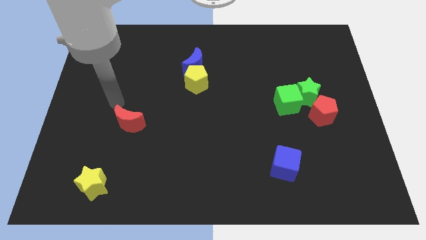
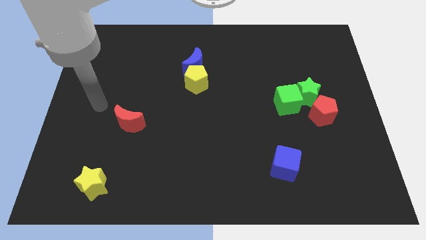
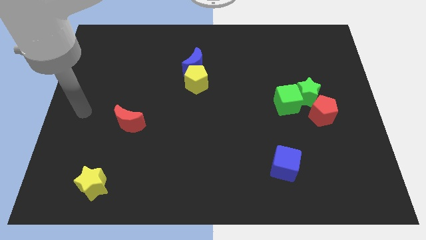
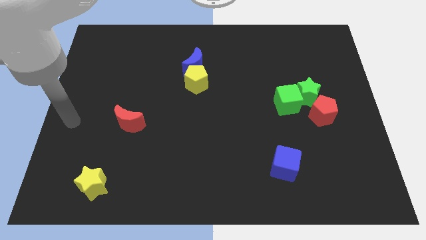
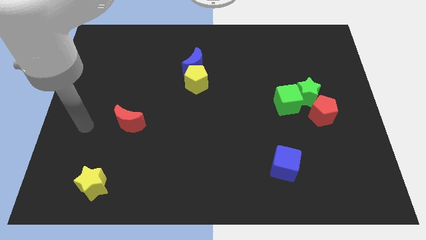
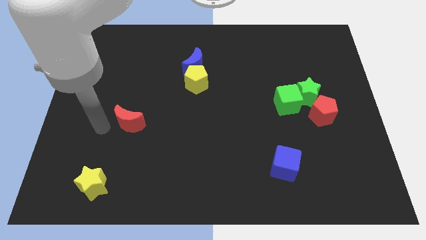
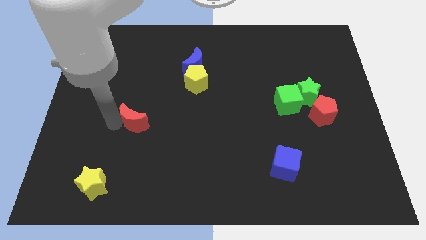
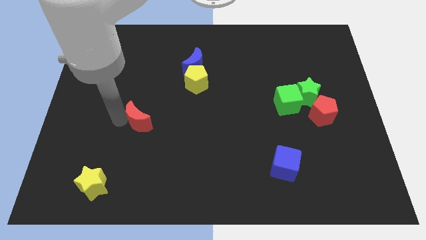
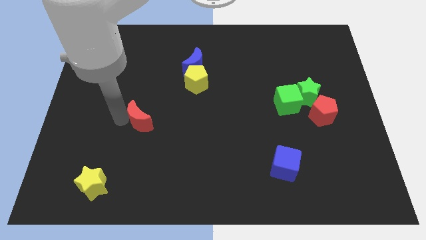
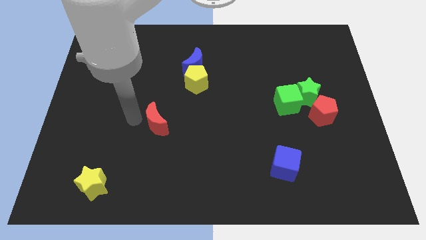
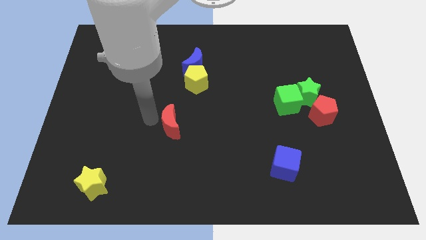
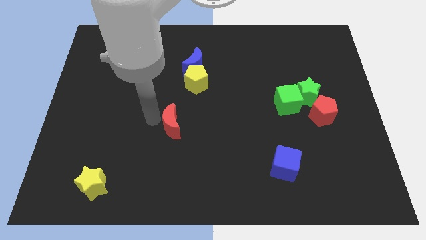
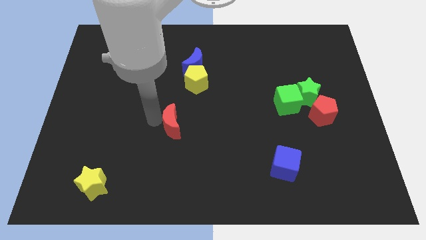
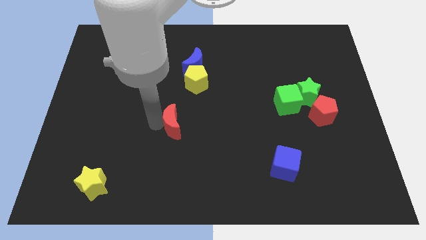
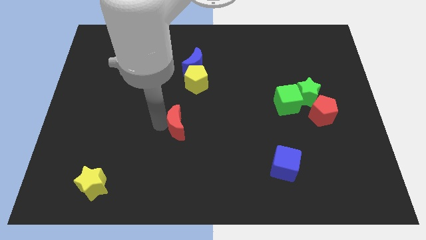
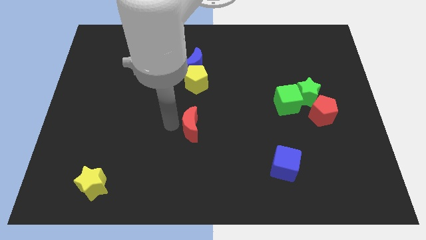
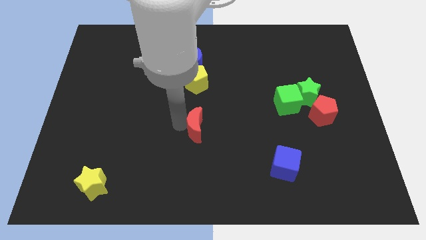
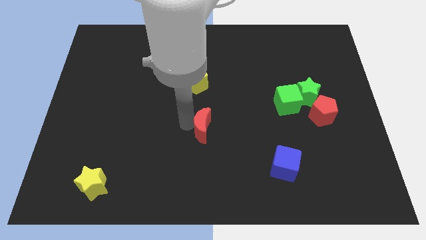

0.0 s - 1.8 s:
move the red moon below the yellow pentagon

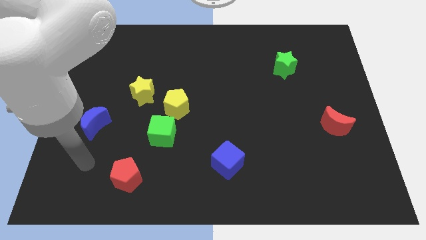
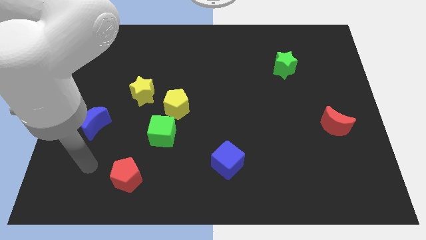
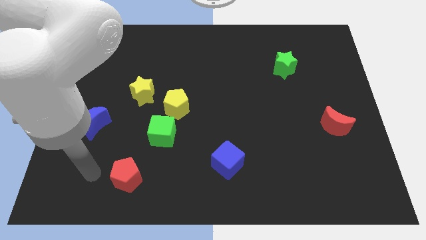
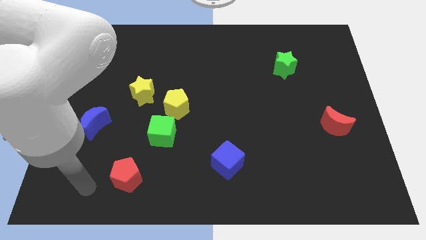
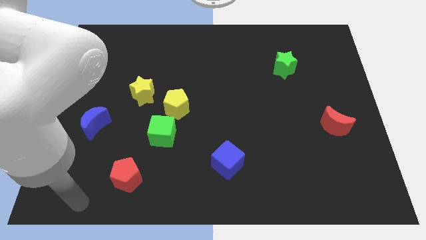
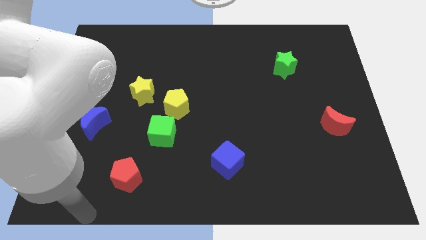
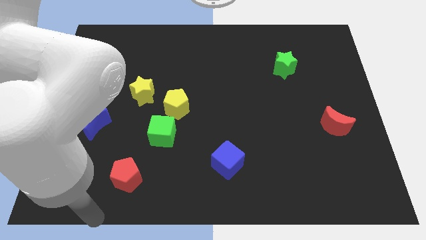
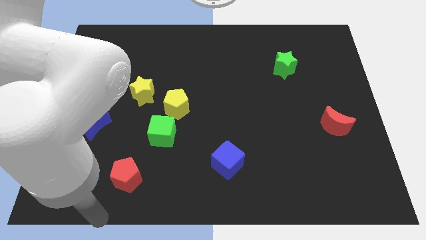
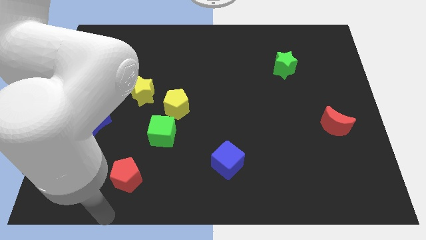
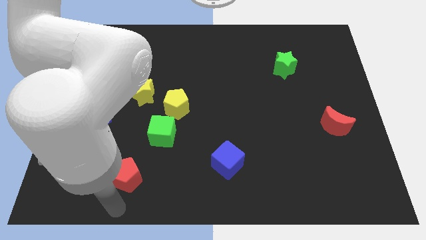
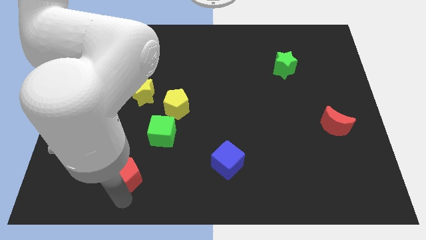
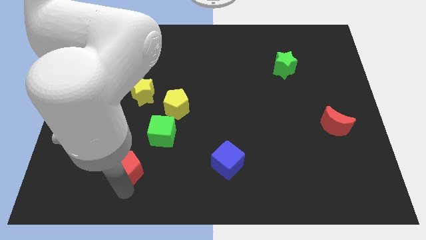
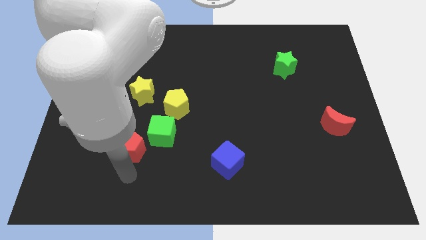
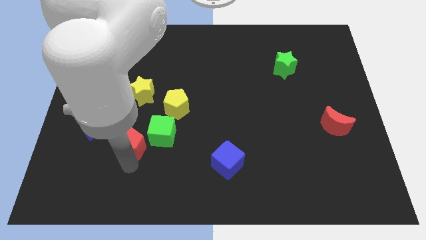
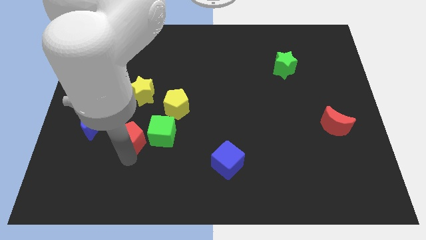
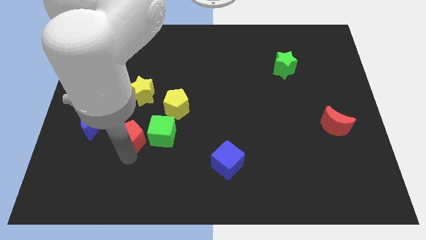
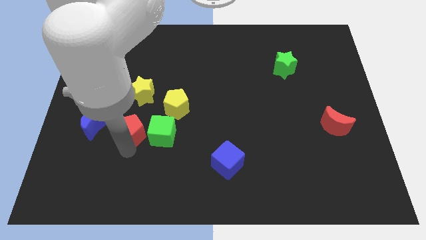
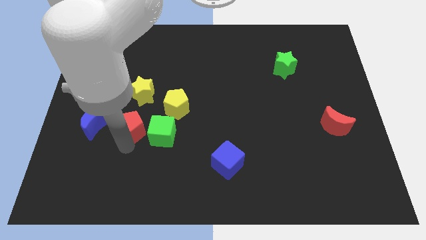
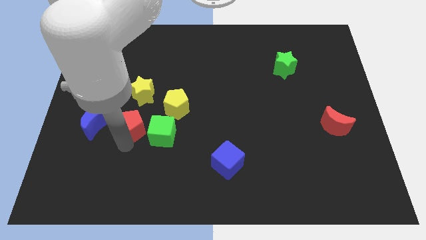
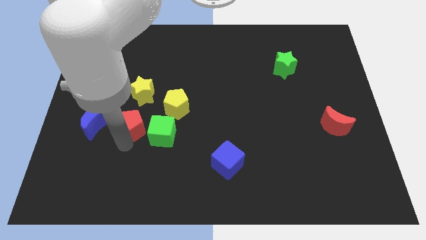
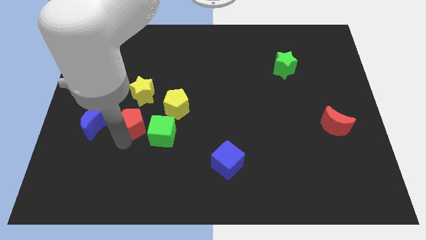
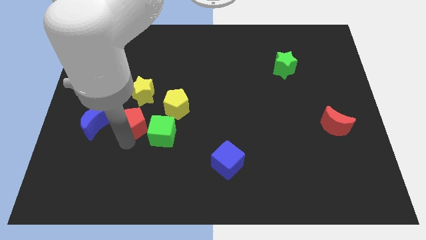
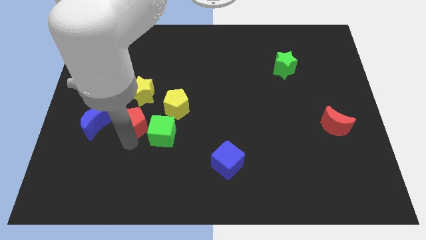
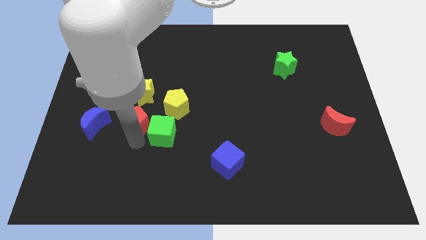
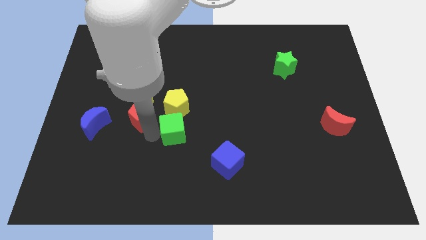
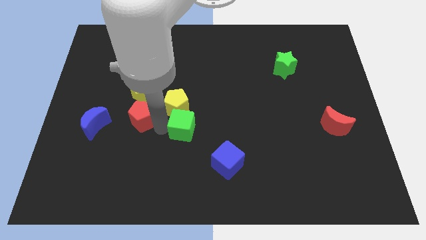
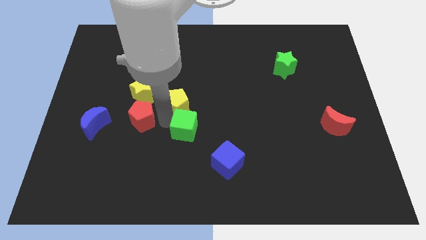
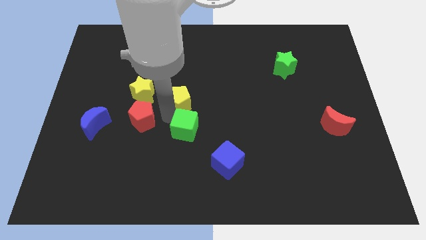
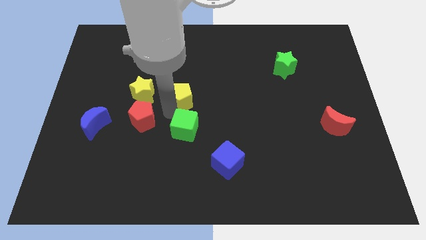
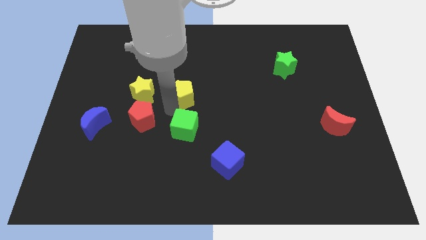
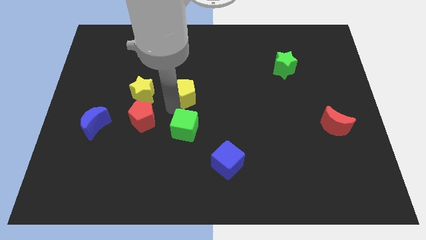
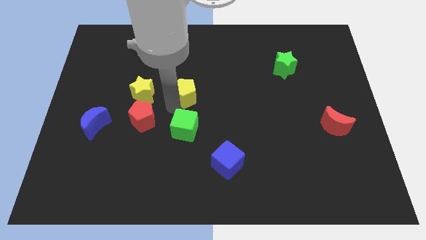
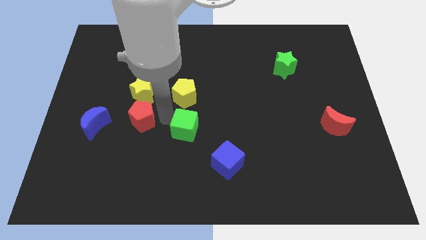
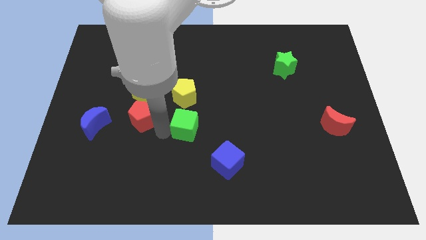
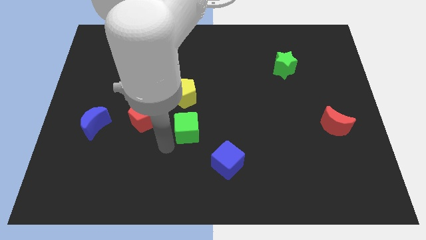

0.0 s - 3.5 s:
place the red pentagon to the left of the green cube

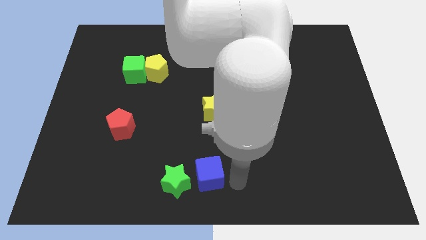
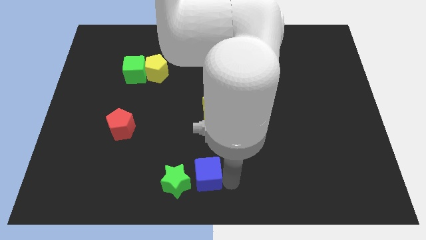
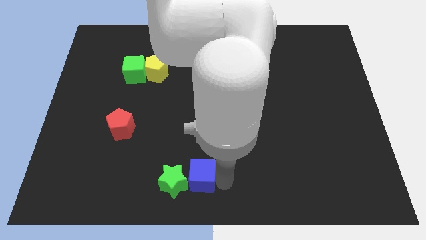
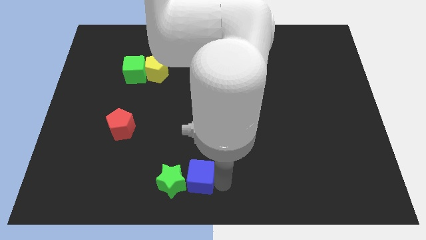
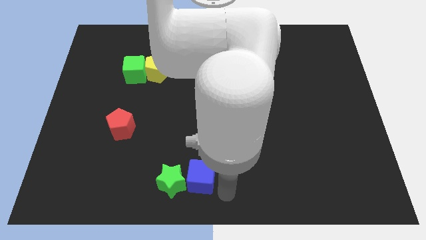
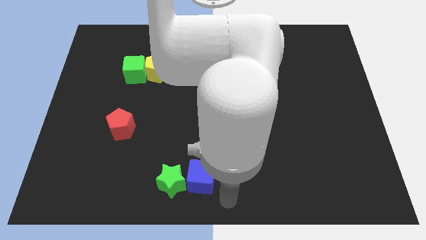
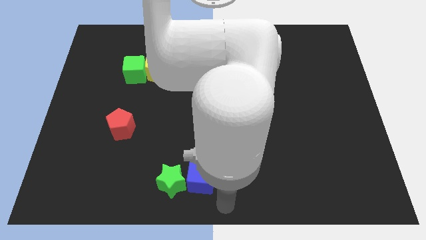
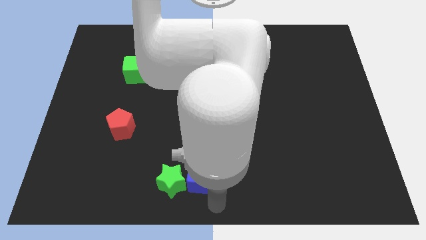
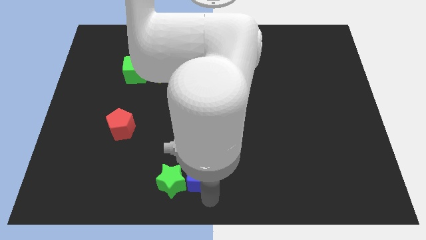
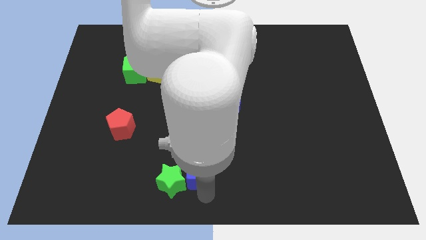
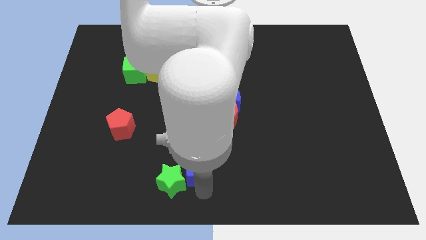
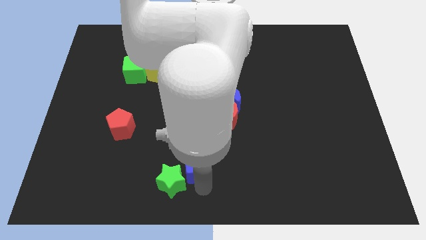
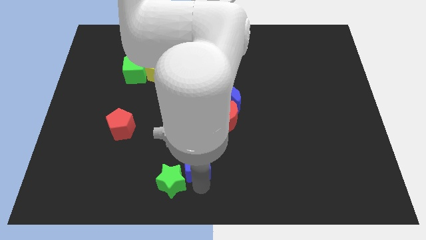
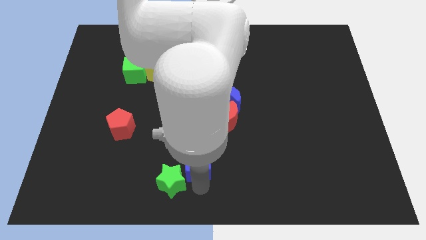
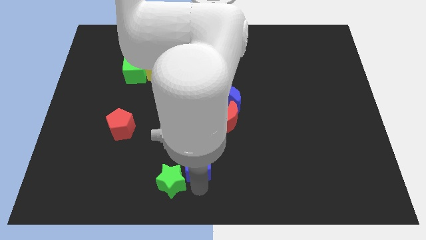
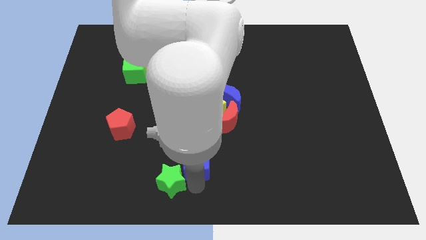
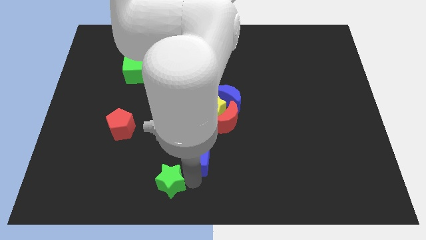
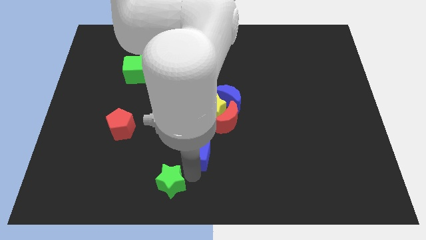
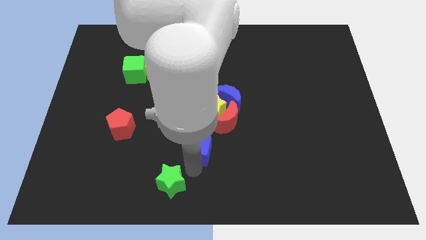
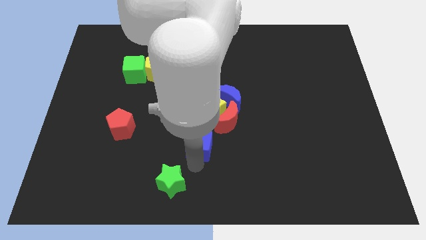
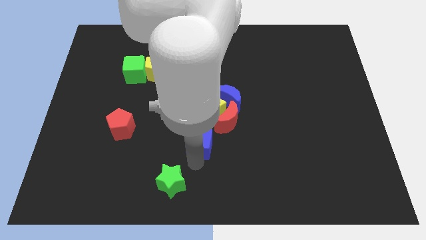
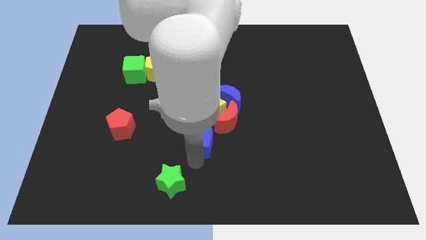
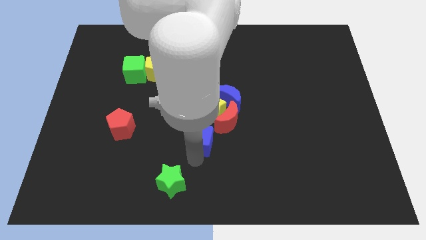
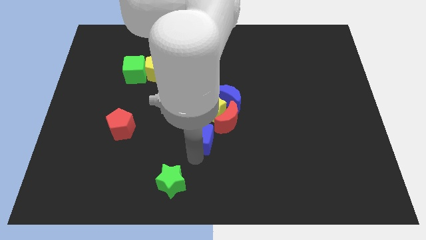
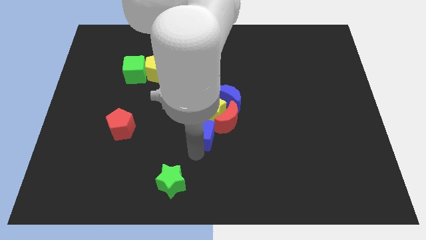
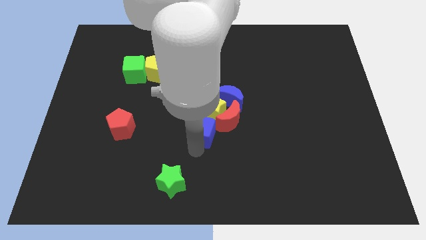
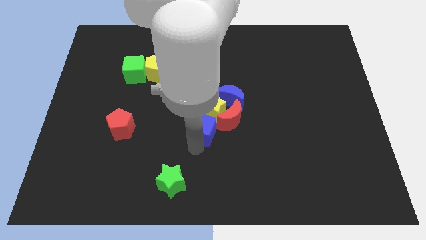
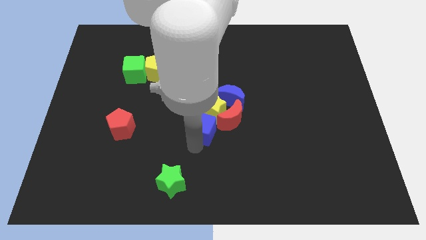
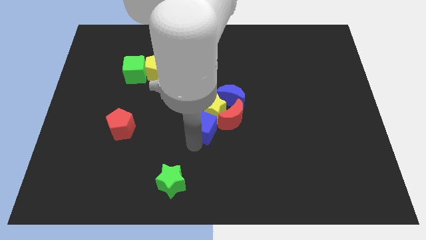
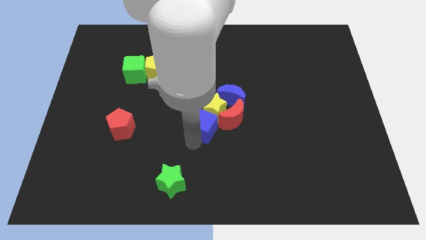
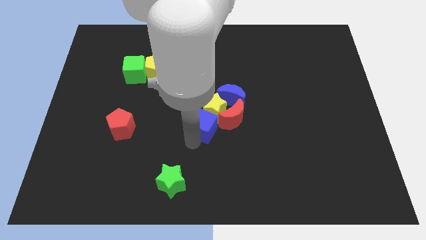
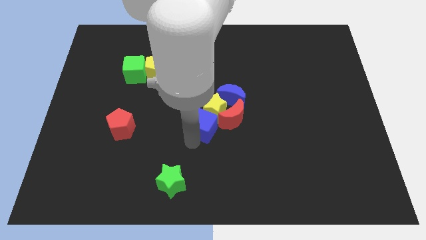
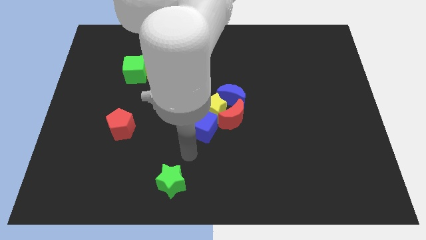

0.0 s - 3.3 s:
place the blue cube into the yellow star at the center

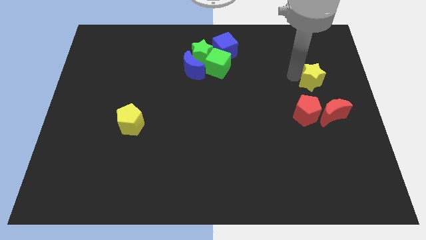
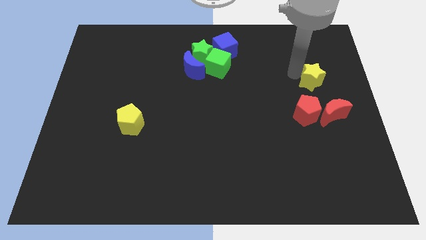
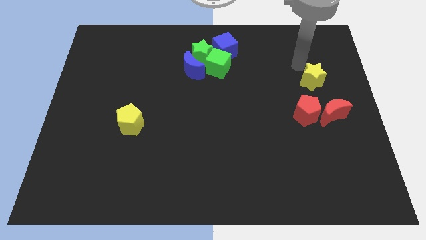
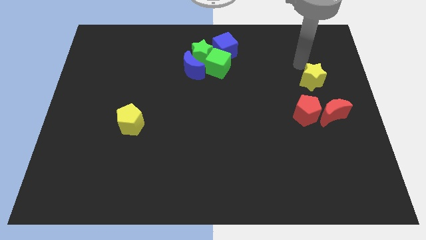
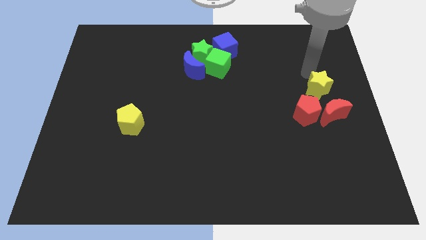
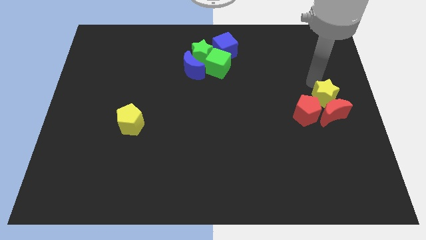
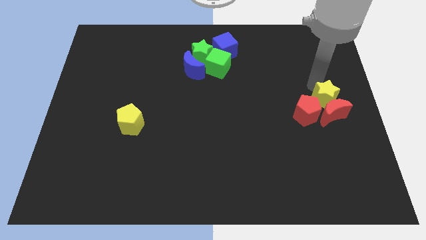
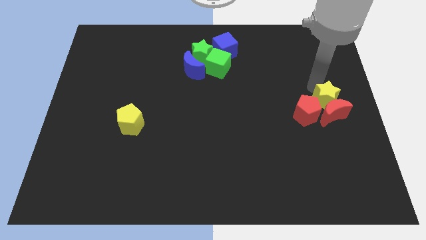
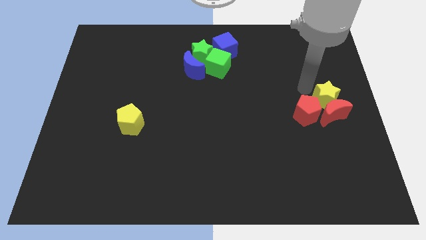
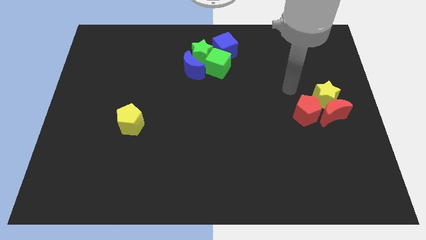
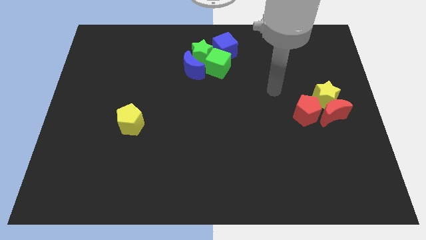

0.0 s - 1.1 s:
slide yellow star above the red moon
